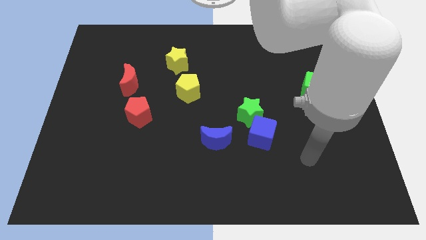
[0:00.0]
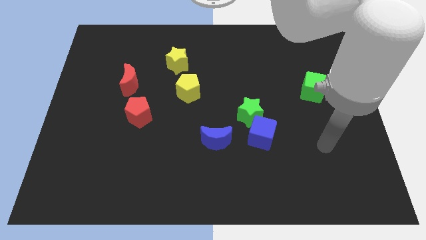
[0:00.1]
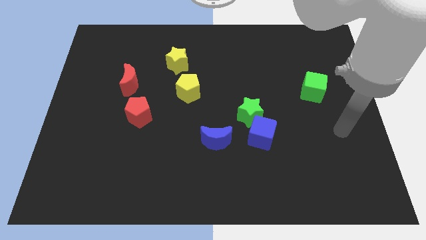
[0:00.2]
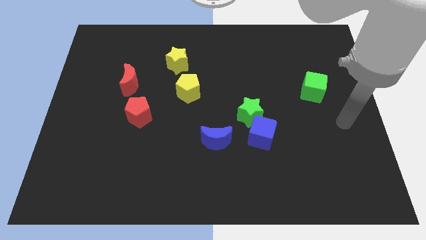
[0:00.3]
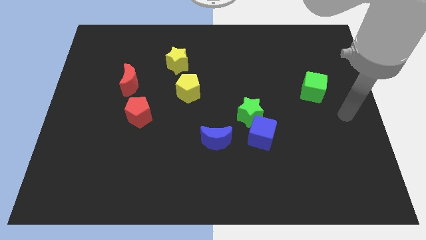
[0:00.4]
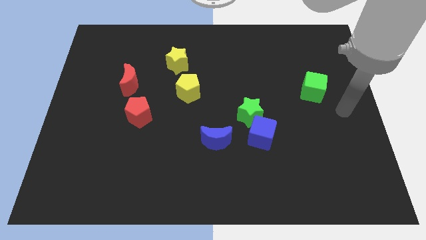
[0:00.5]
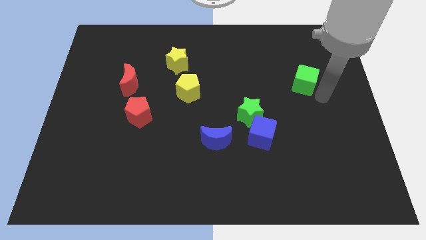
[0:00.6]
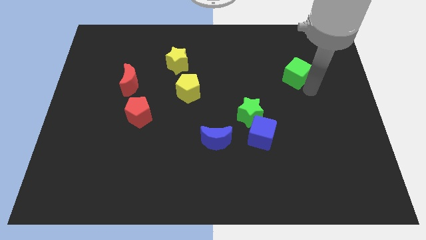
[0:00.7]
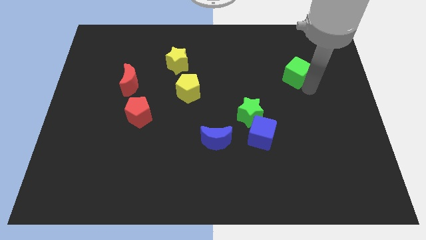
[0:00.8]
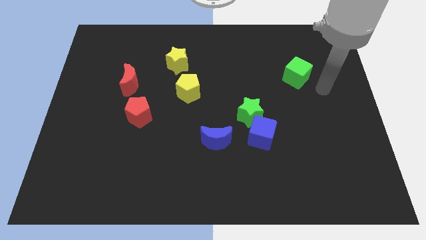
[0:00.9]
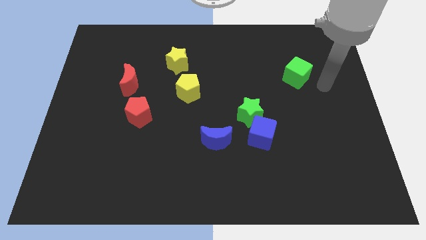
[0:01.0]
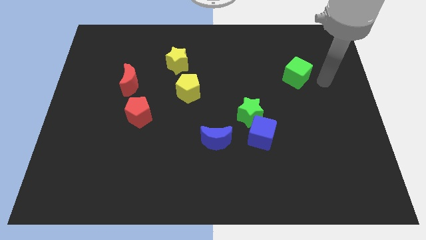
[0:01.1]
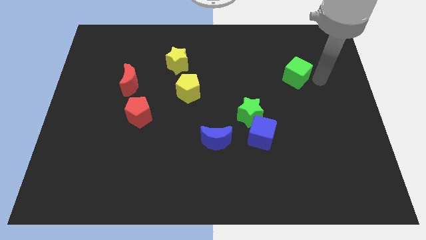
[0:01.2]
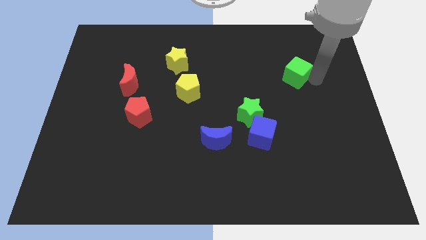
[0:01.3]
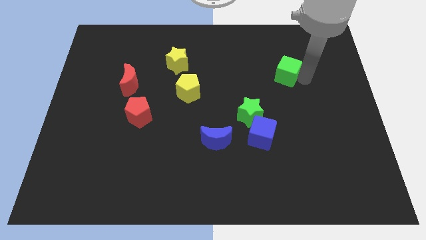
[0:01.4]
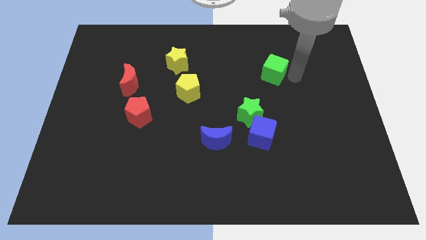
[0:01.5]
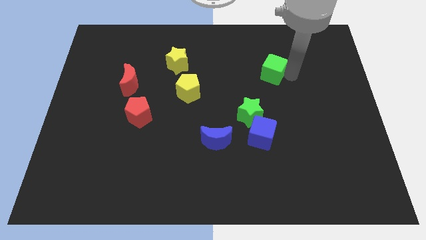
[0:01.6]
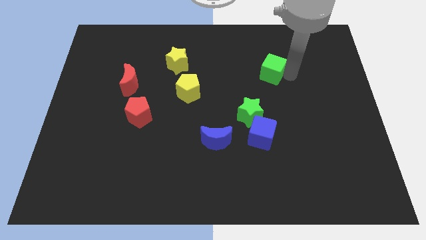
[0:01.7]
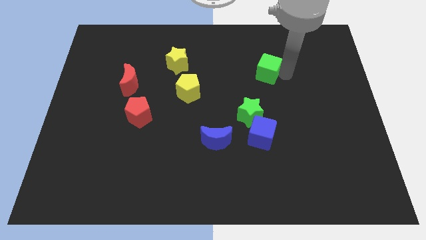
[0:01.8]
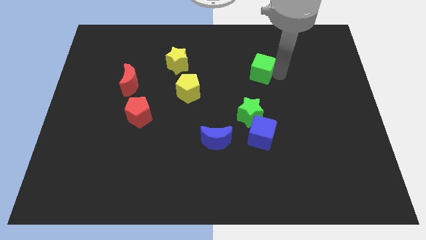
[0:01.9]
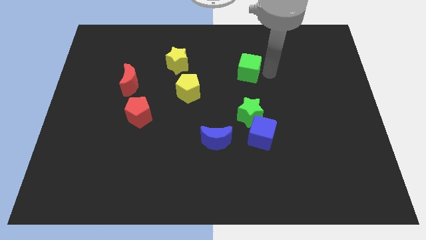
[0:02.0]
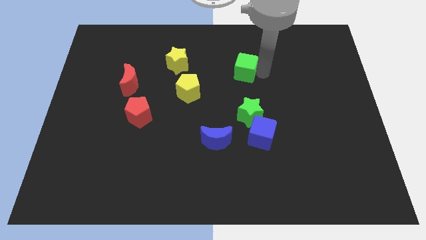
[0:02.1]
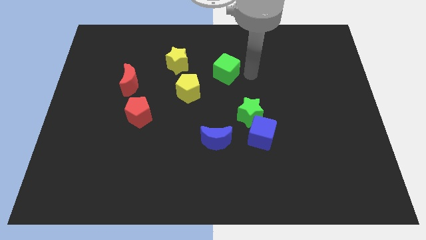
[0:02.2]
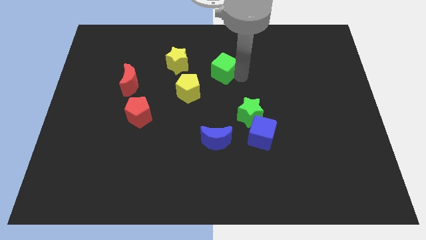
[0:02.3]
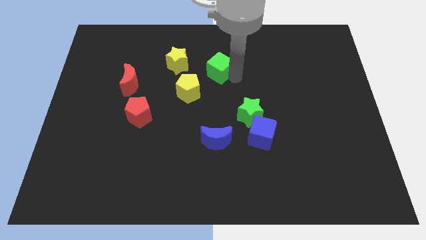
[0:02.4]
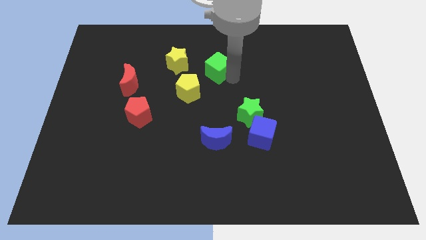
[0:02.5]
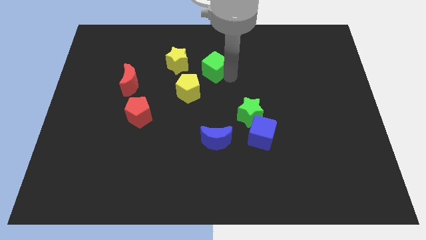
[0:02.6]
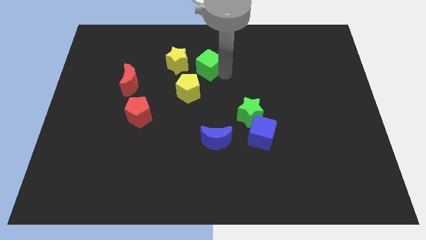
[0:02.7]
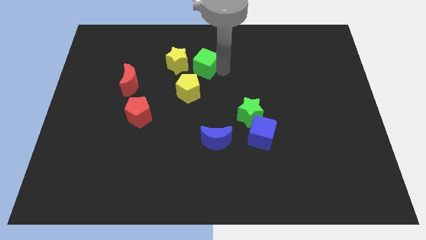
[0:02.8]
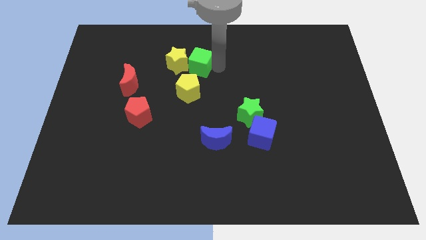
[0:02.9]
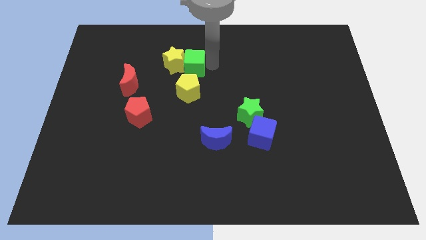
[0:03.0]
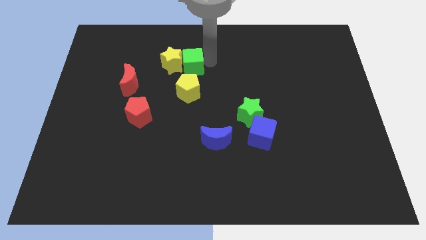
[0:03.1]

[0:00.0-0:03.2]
push the green cube towards the yellow star

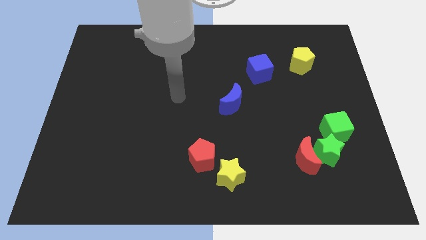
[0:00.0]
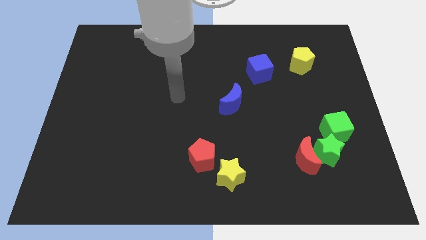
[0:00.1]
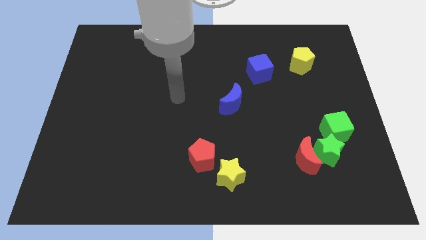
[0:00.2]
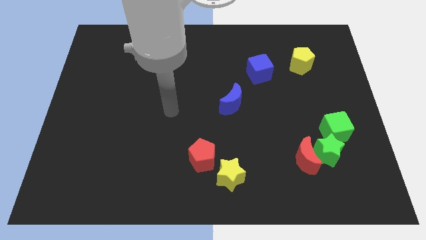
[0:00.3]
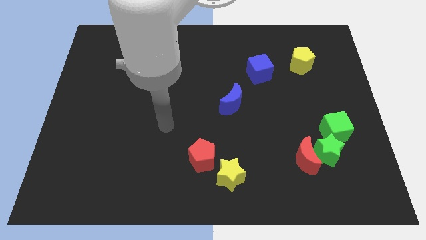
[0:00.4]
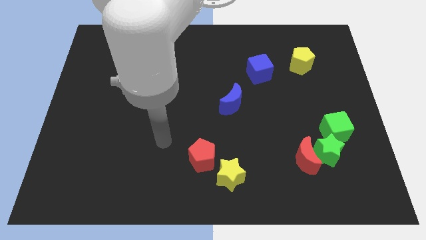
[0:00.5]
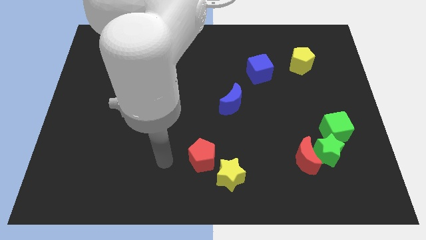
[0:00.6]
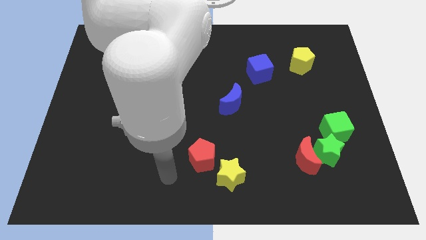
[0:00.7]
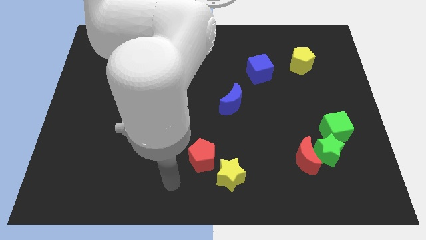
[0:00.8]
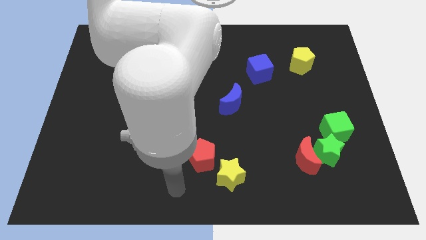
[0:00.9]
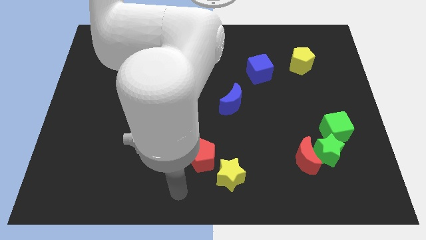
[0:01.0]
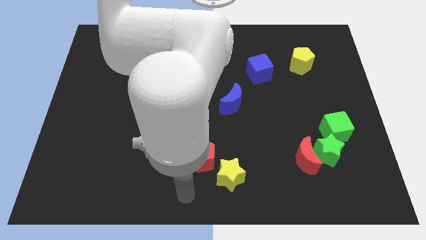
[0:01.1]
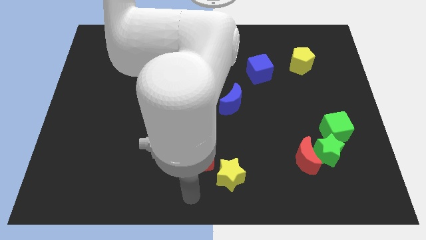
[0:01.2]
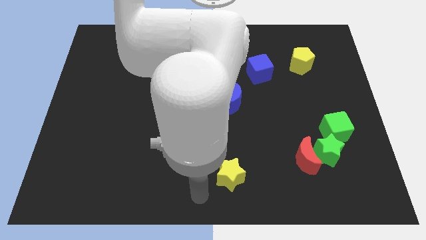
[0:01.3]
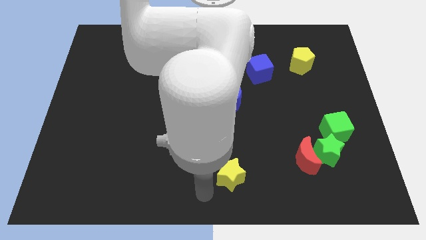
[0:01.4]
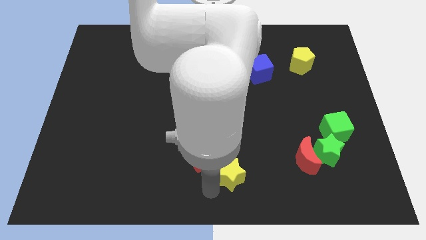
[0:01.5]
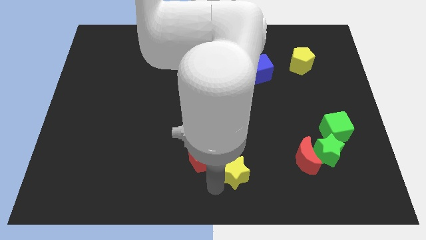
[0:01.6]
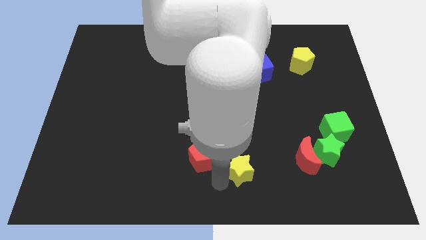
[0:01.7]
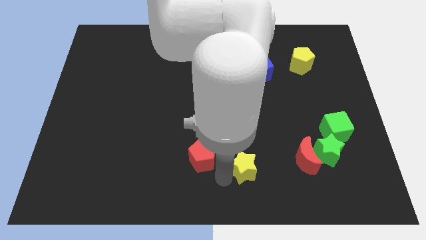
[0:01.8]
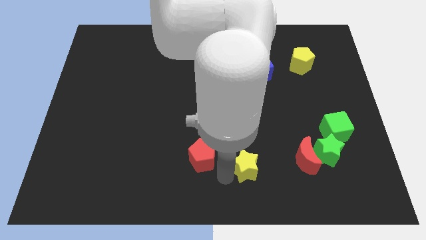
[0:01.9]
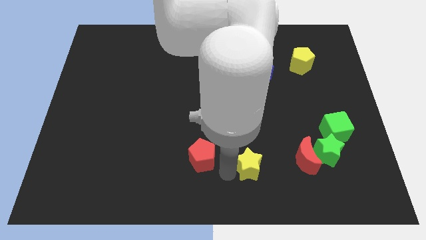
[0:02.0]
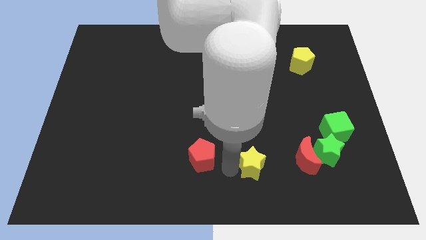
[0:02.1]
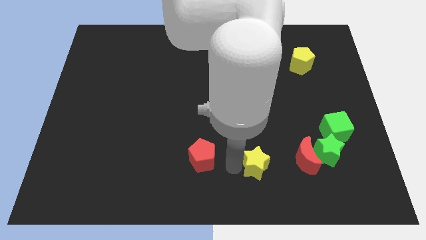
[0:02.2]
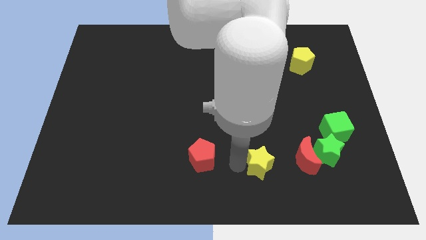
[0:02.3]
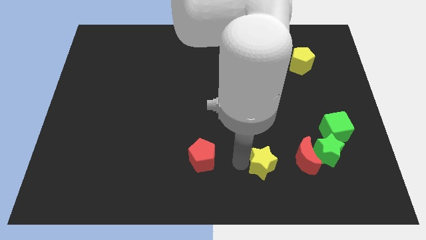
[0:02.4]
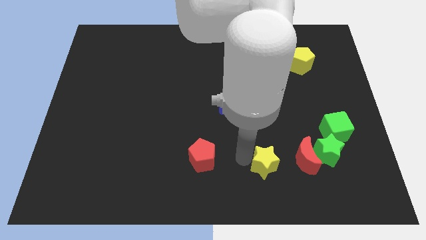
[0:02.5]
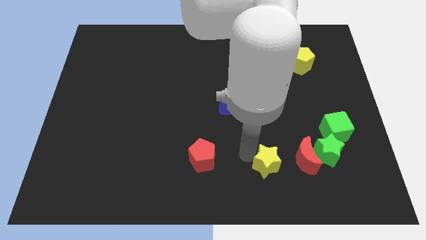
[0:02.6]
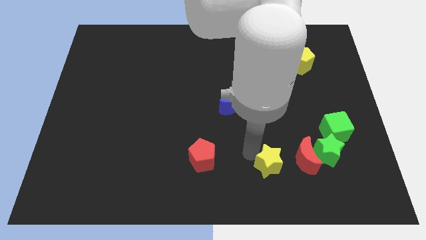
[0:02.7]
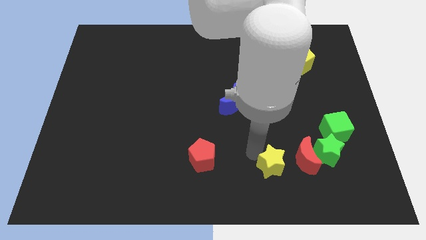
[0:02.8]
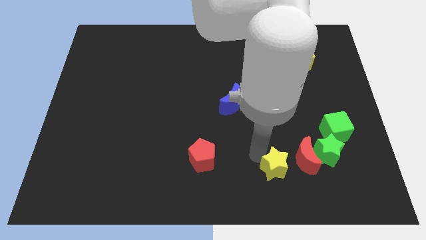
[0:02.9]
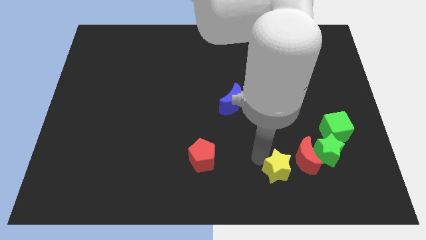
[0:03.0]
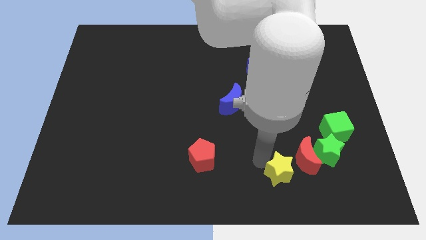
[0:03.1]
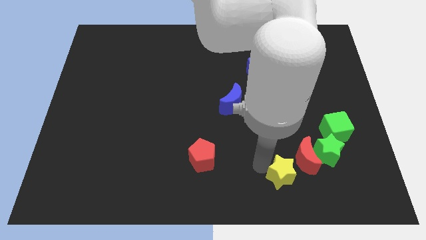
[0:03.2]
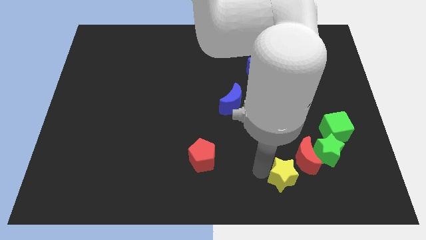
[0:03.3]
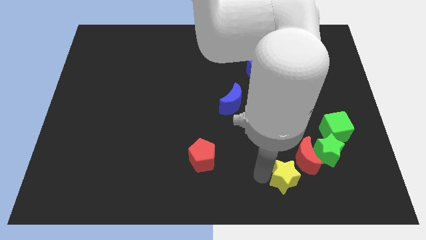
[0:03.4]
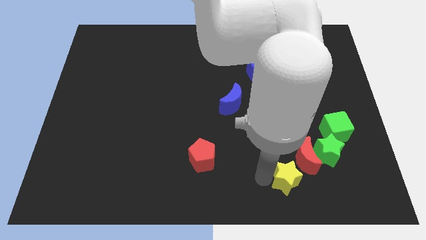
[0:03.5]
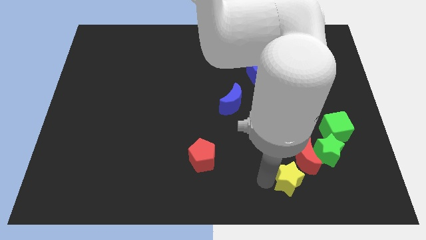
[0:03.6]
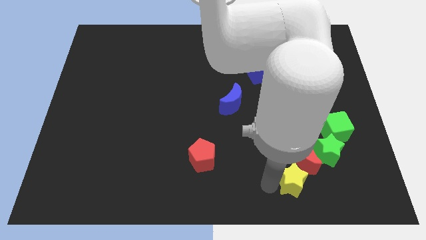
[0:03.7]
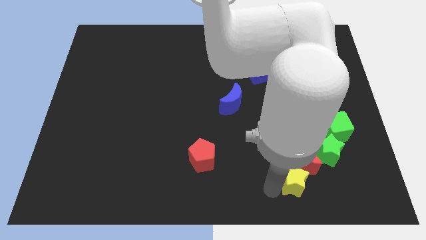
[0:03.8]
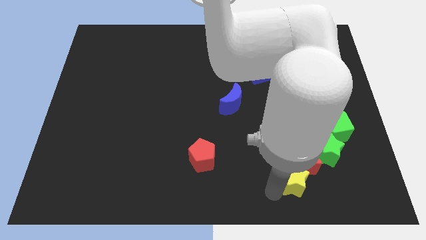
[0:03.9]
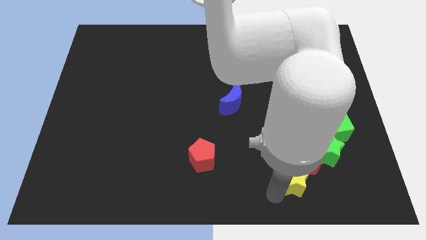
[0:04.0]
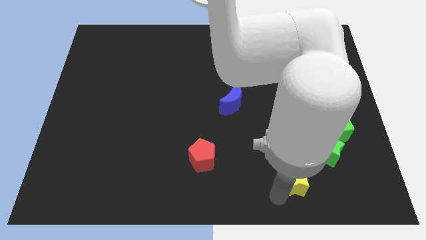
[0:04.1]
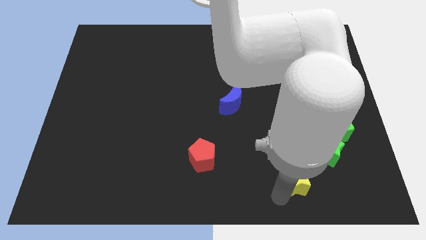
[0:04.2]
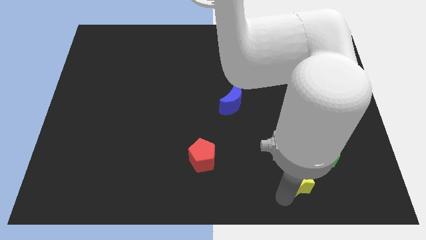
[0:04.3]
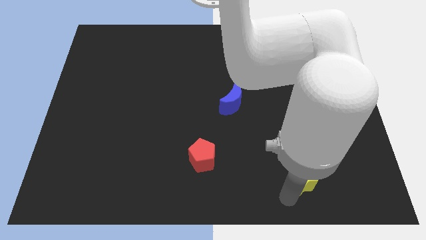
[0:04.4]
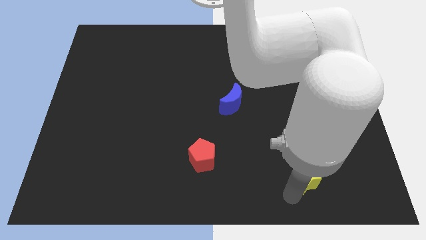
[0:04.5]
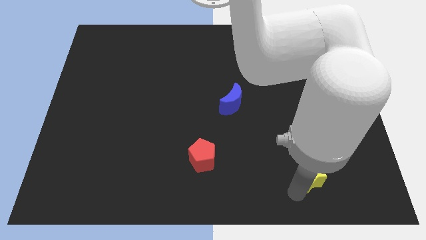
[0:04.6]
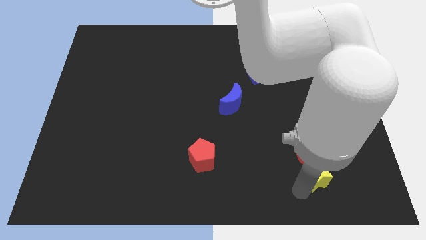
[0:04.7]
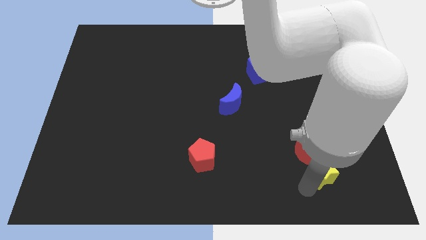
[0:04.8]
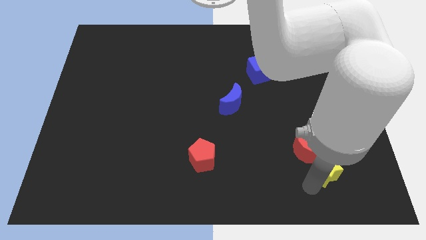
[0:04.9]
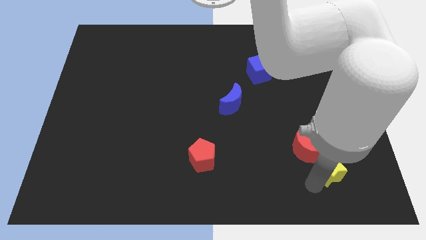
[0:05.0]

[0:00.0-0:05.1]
move the yellow star towards the green star
